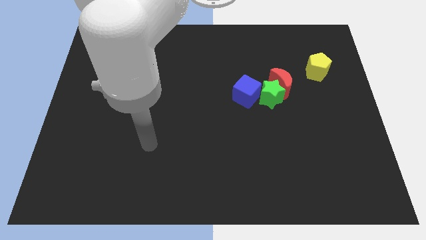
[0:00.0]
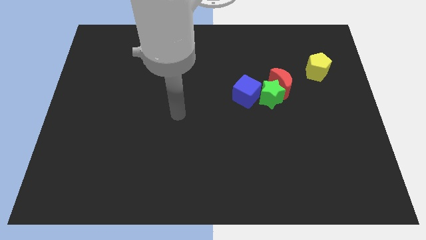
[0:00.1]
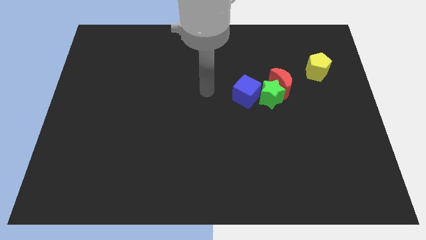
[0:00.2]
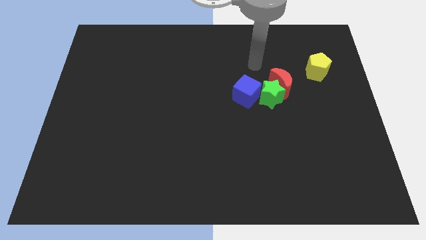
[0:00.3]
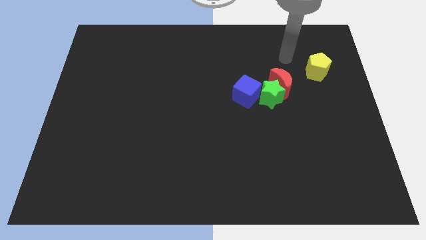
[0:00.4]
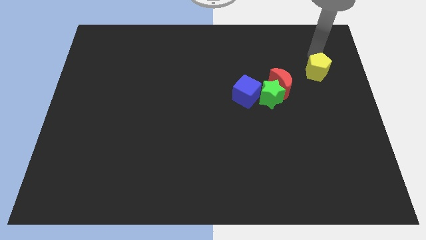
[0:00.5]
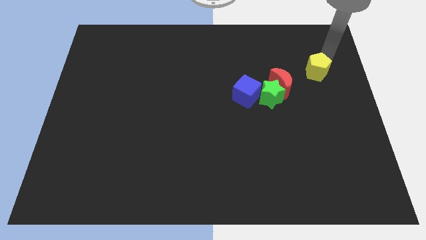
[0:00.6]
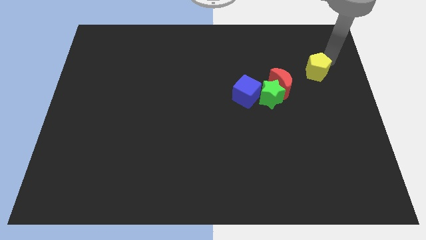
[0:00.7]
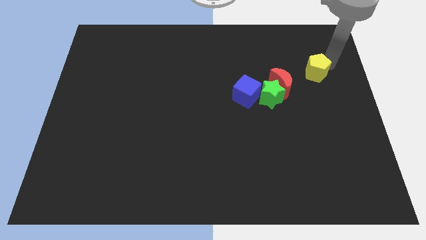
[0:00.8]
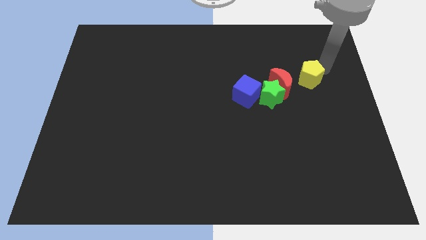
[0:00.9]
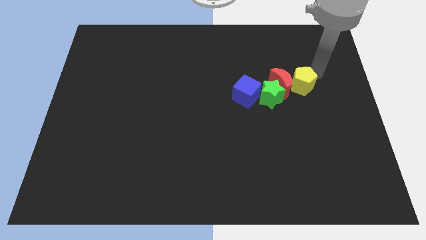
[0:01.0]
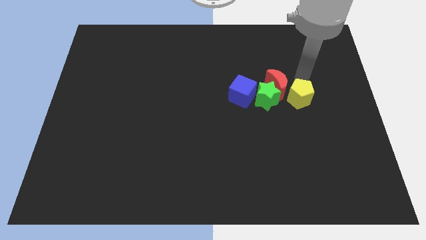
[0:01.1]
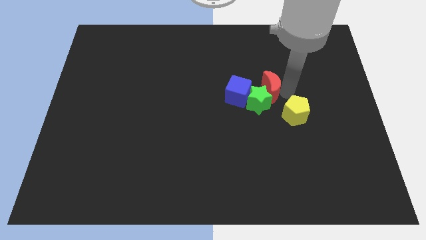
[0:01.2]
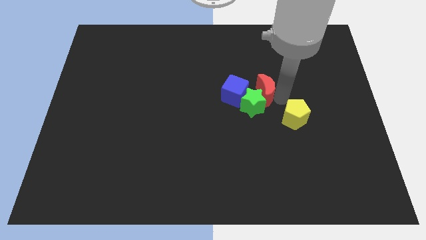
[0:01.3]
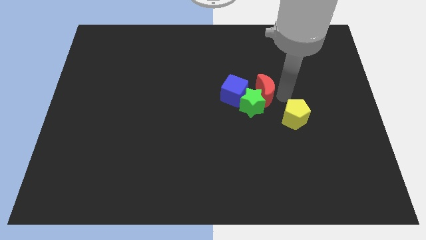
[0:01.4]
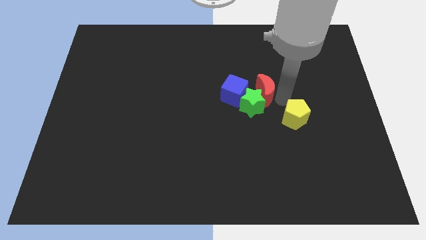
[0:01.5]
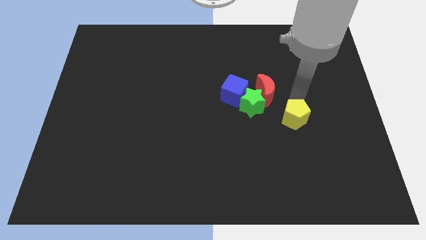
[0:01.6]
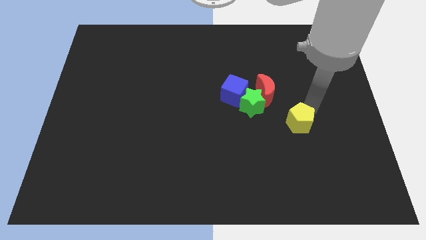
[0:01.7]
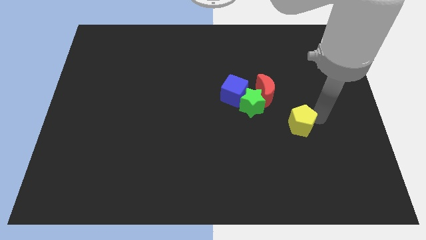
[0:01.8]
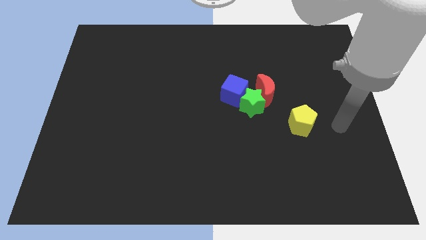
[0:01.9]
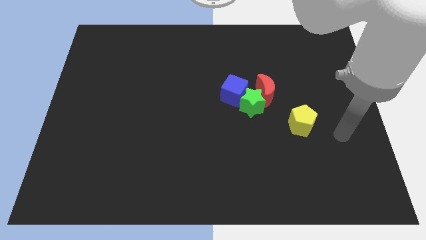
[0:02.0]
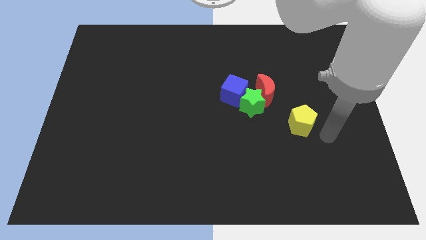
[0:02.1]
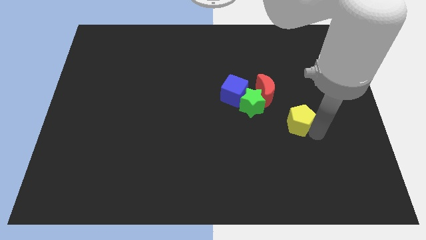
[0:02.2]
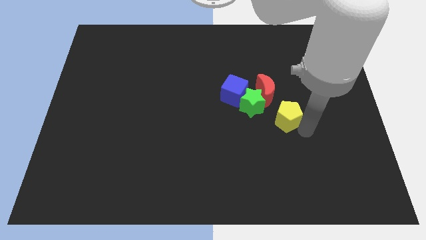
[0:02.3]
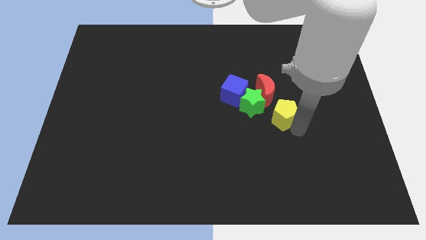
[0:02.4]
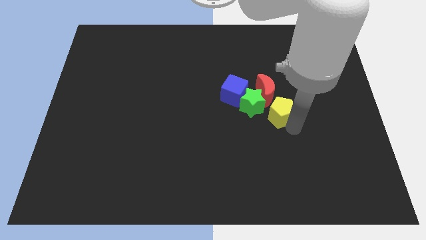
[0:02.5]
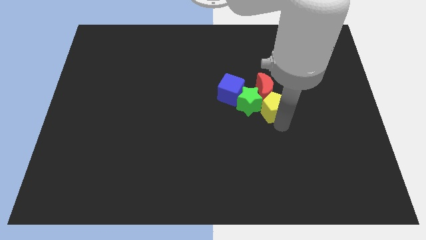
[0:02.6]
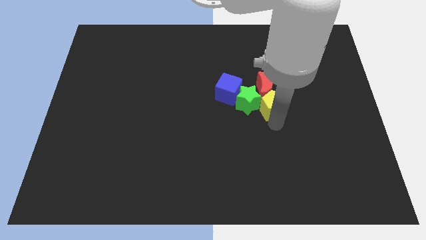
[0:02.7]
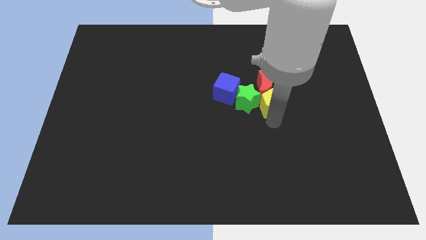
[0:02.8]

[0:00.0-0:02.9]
push the pentagon next to the green block

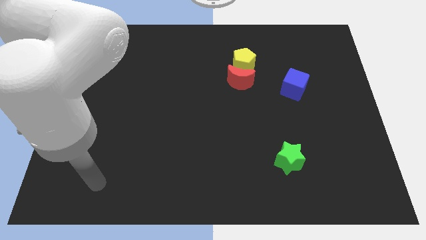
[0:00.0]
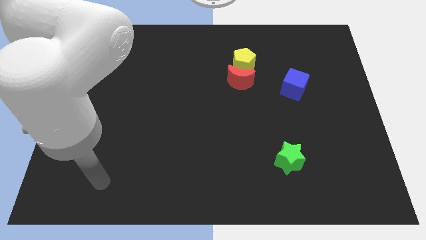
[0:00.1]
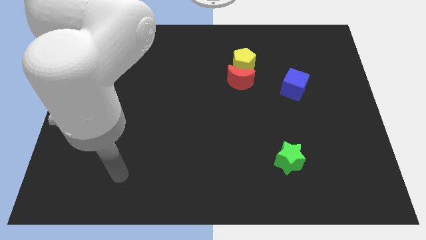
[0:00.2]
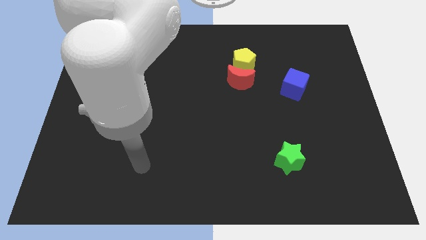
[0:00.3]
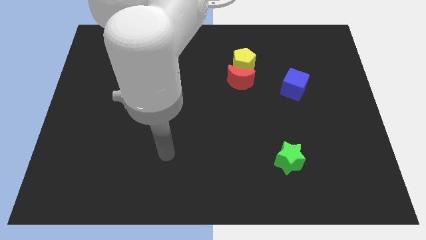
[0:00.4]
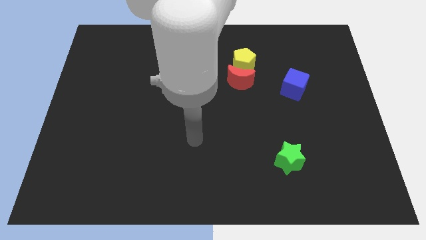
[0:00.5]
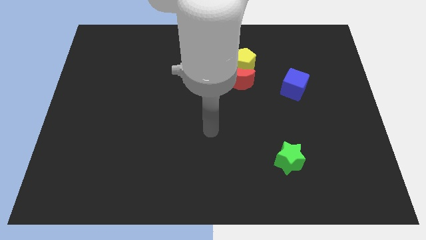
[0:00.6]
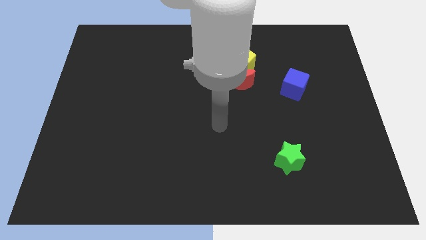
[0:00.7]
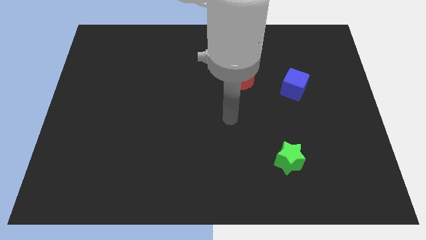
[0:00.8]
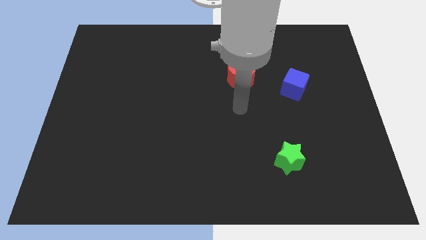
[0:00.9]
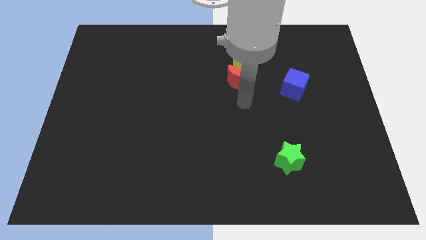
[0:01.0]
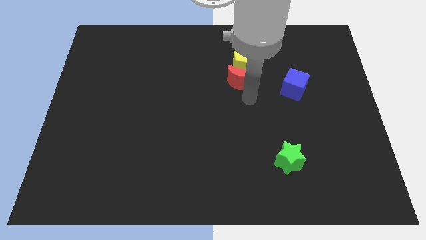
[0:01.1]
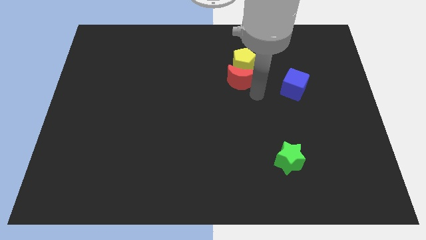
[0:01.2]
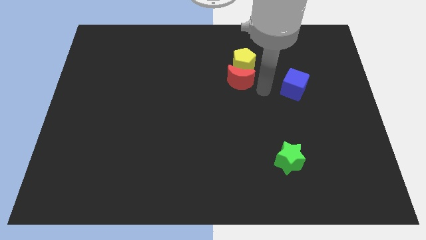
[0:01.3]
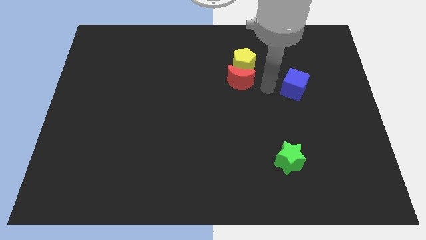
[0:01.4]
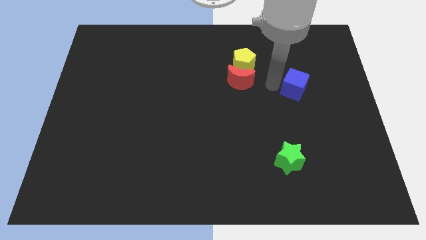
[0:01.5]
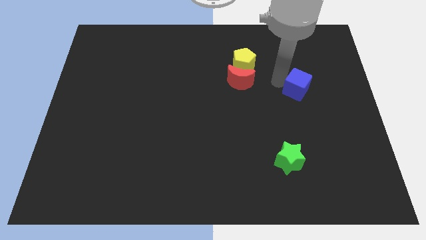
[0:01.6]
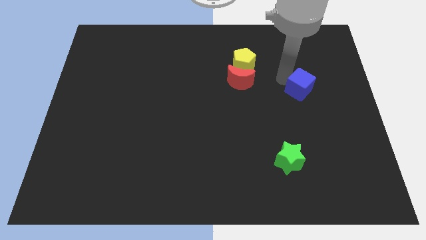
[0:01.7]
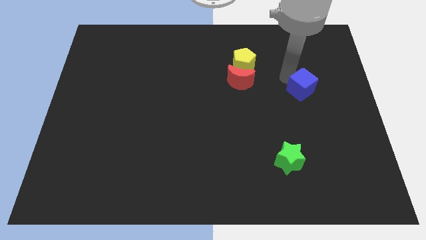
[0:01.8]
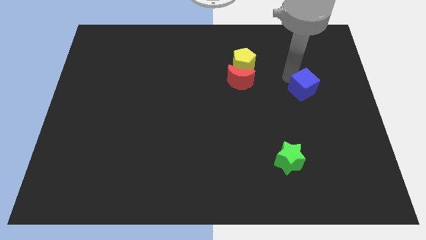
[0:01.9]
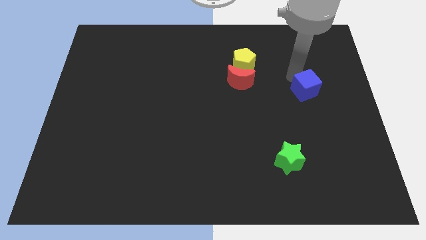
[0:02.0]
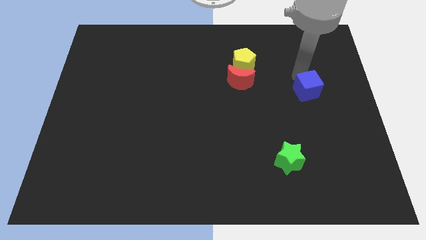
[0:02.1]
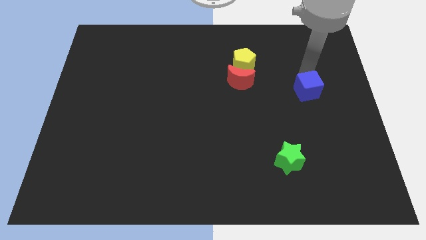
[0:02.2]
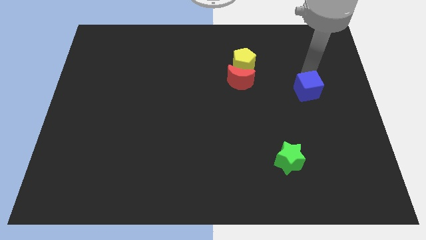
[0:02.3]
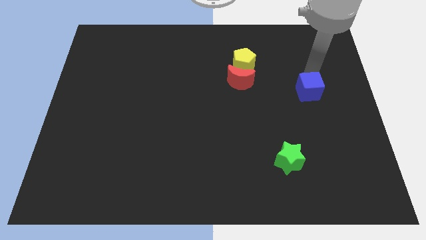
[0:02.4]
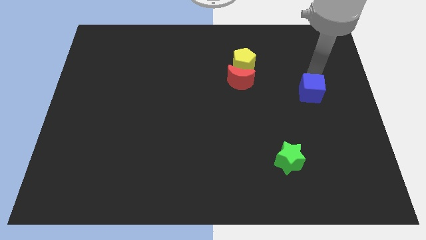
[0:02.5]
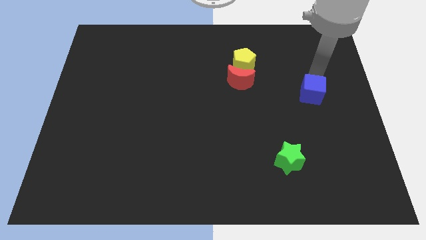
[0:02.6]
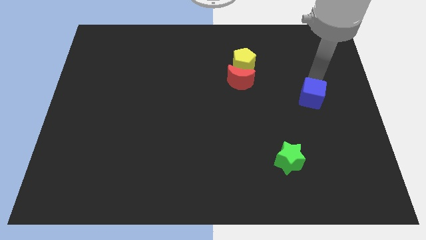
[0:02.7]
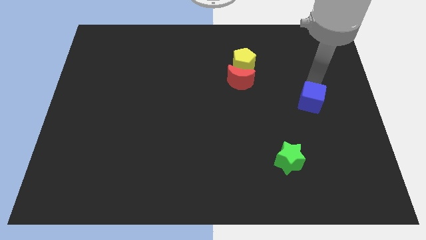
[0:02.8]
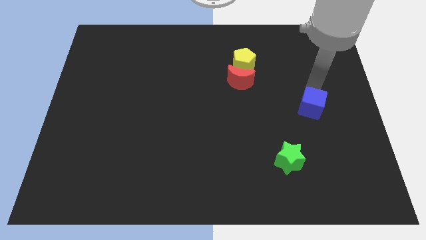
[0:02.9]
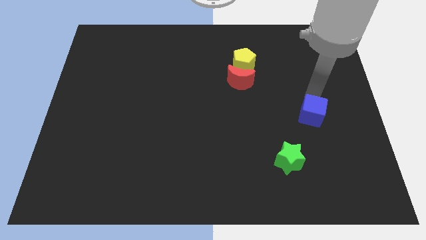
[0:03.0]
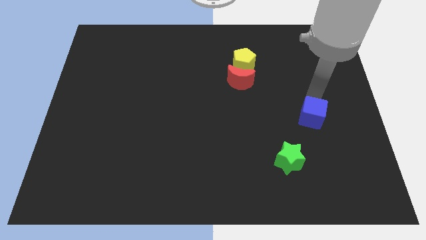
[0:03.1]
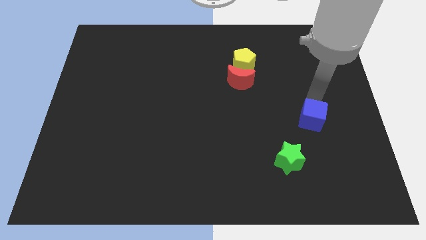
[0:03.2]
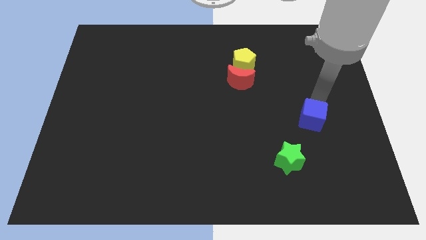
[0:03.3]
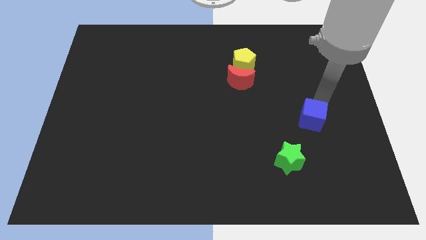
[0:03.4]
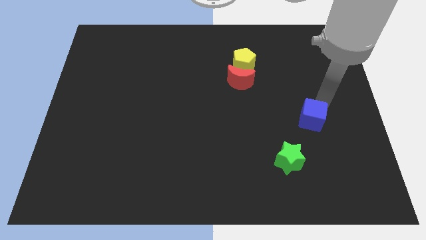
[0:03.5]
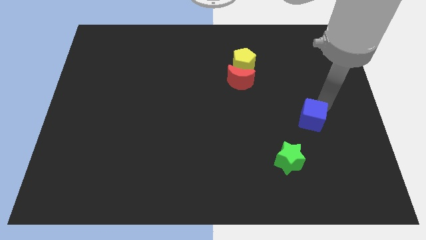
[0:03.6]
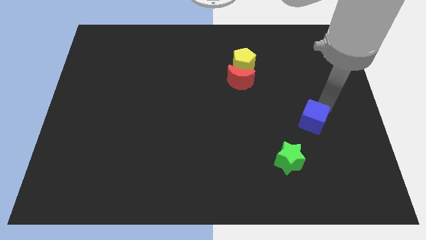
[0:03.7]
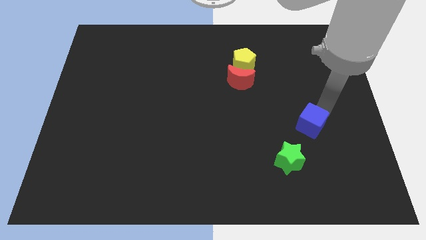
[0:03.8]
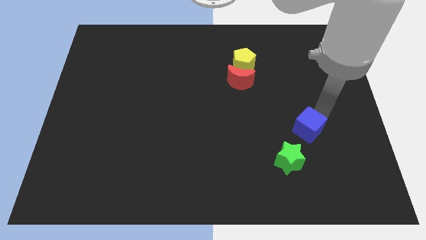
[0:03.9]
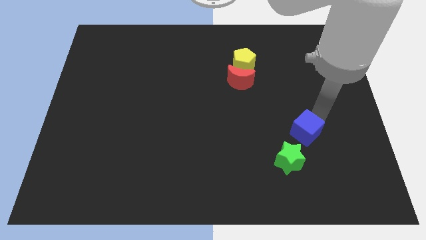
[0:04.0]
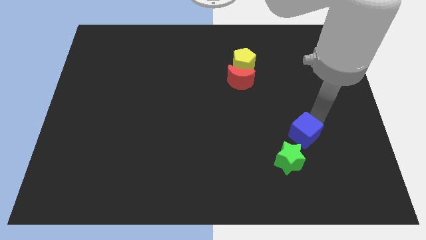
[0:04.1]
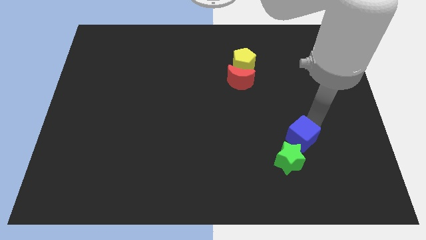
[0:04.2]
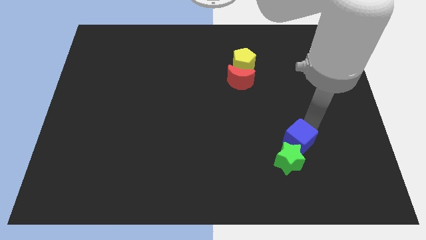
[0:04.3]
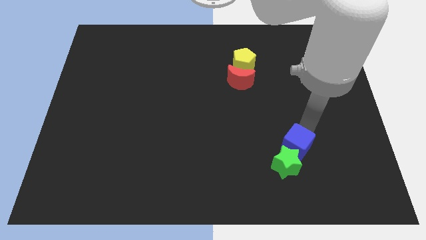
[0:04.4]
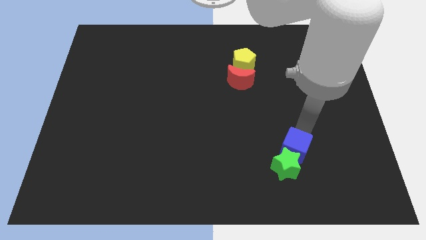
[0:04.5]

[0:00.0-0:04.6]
move the blue cube towards the green block

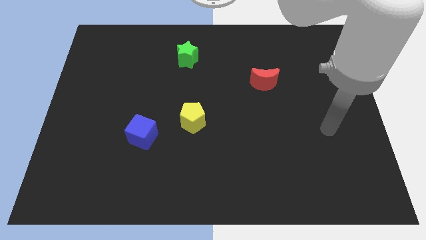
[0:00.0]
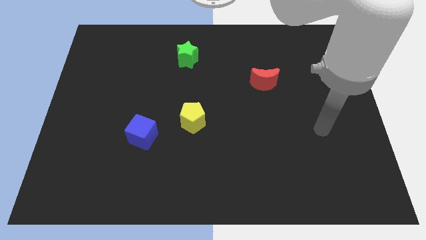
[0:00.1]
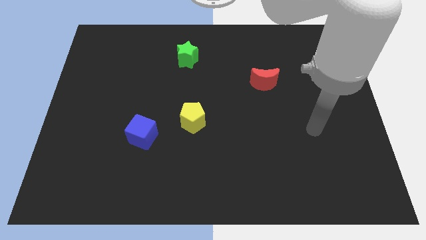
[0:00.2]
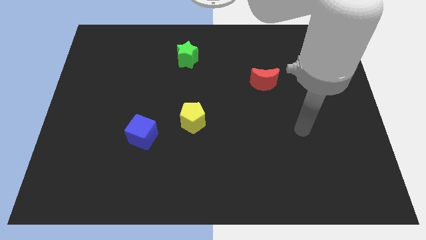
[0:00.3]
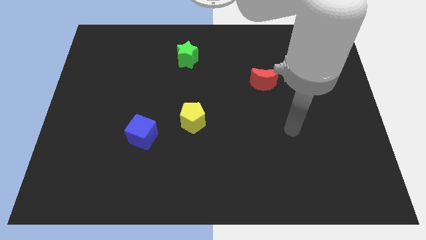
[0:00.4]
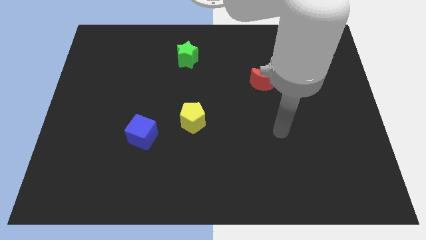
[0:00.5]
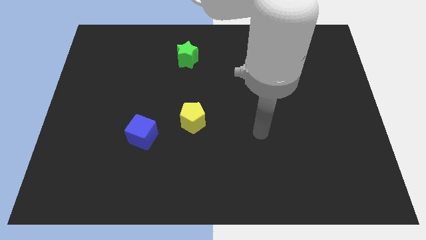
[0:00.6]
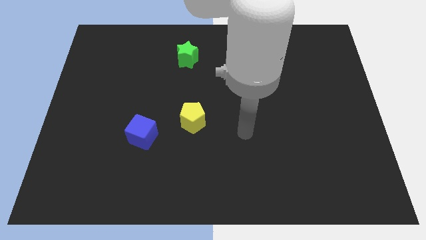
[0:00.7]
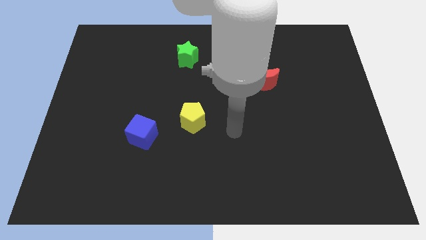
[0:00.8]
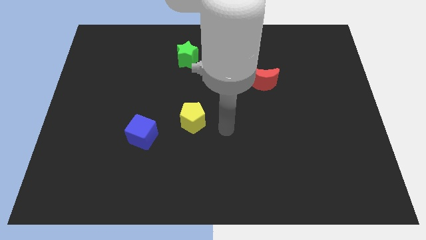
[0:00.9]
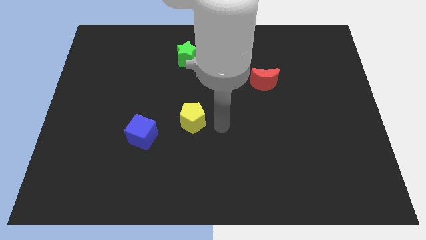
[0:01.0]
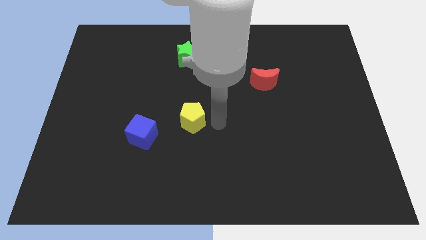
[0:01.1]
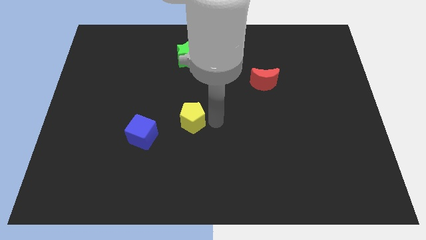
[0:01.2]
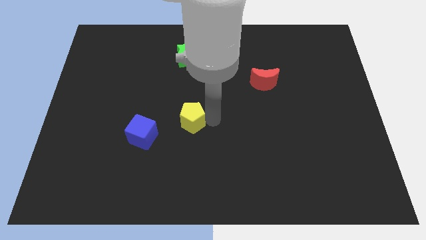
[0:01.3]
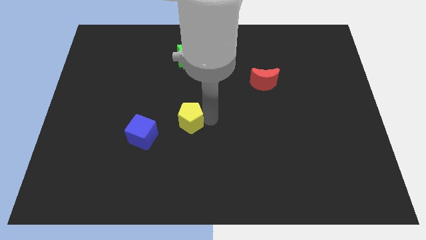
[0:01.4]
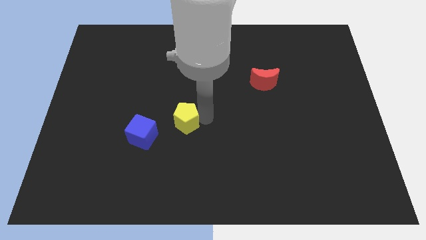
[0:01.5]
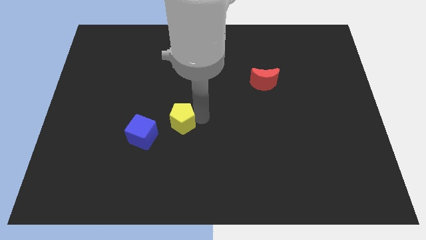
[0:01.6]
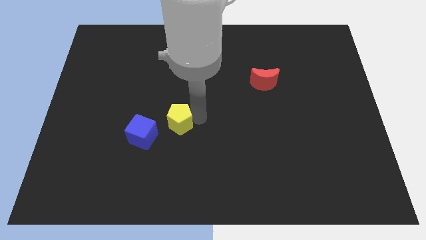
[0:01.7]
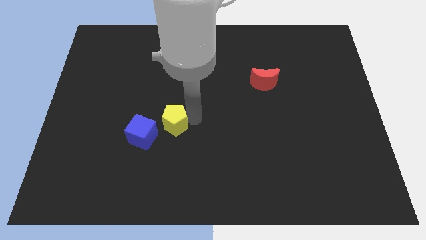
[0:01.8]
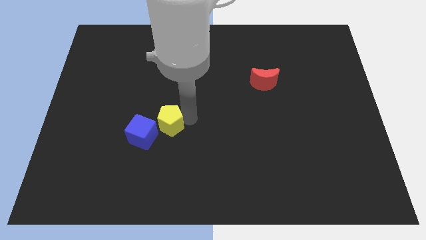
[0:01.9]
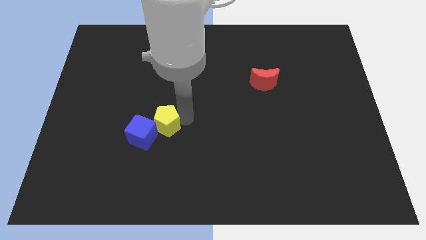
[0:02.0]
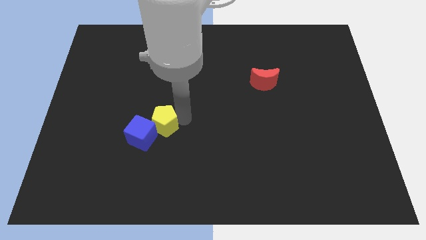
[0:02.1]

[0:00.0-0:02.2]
slide the yellow block next to the blue block
